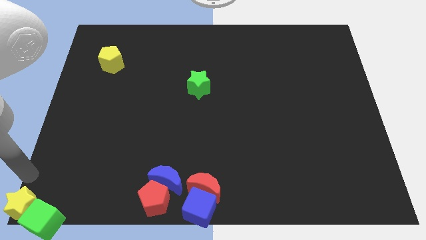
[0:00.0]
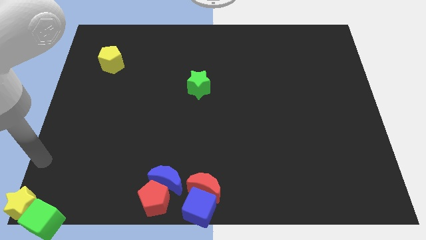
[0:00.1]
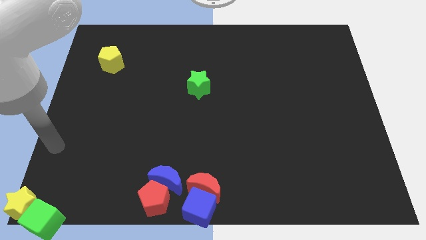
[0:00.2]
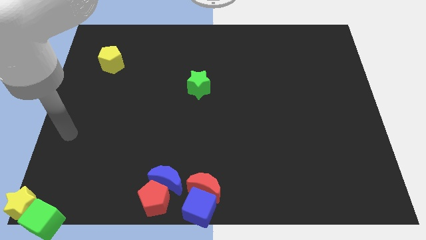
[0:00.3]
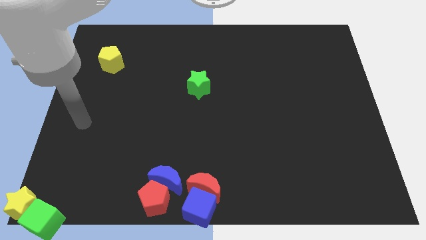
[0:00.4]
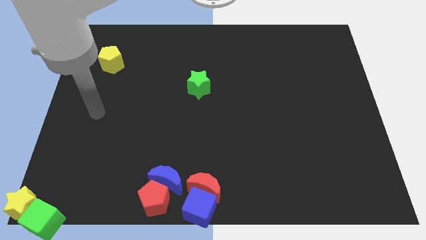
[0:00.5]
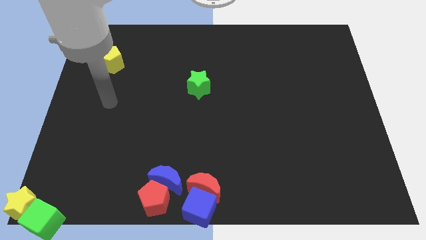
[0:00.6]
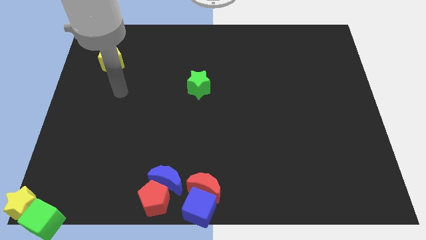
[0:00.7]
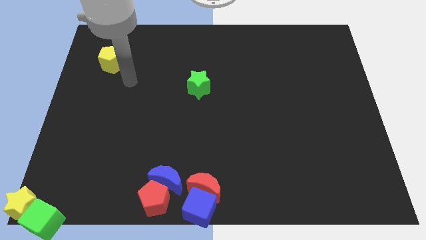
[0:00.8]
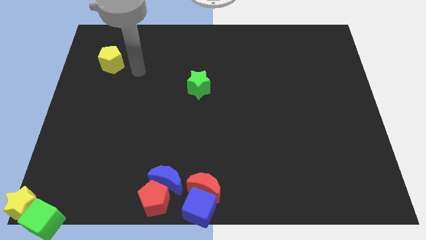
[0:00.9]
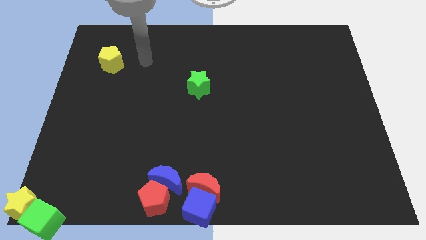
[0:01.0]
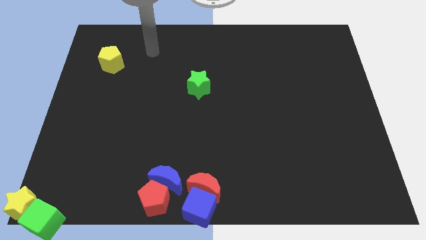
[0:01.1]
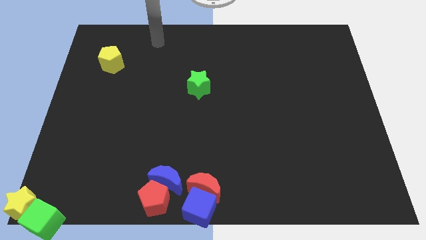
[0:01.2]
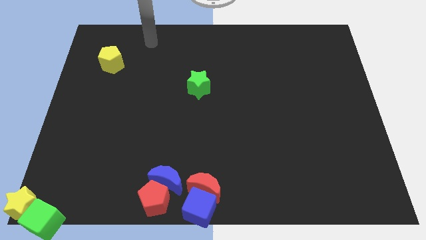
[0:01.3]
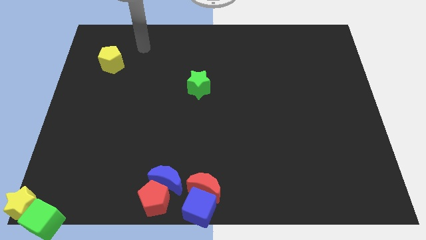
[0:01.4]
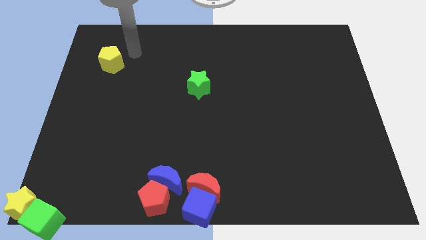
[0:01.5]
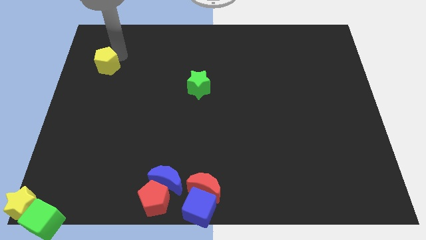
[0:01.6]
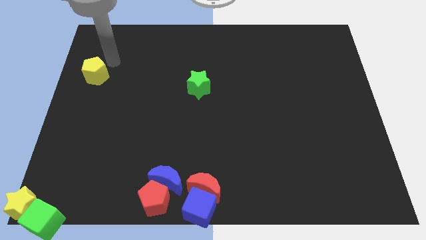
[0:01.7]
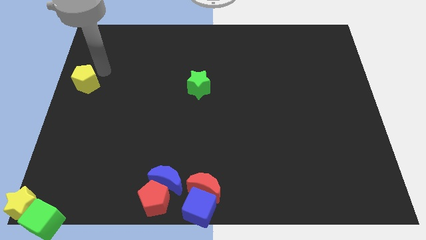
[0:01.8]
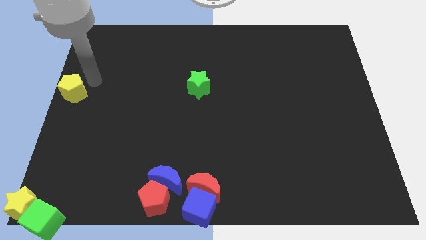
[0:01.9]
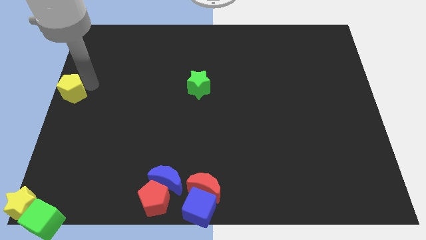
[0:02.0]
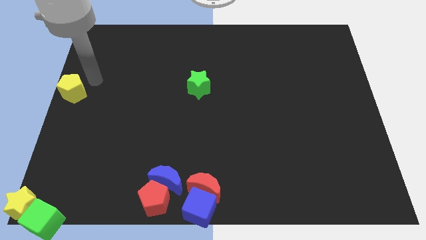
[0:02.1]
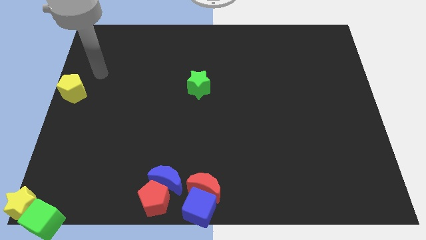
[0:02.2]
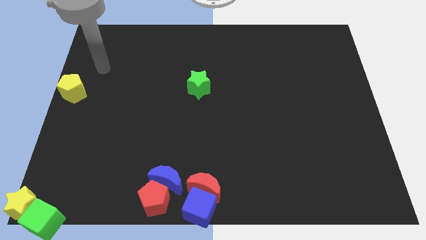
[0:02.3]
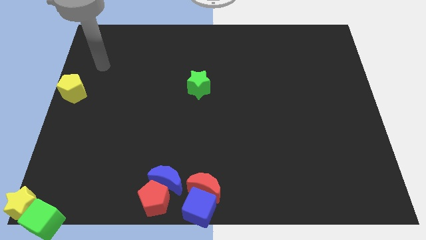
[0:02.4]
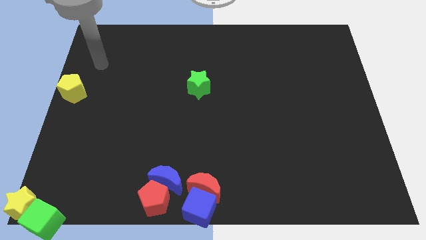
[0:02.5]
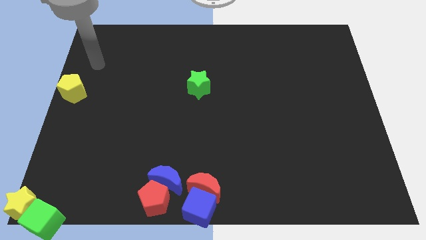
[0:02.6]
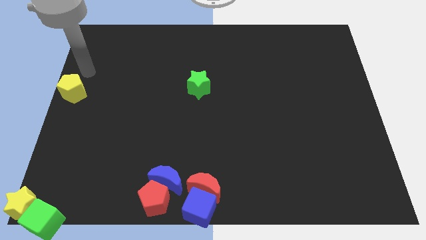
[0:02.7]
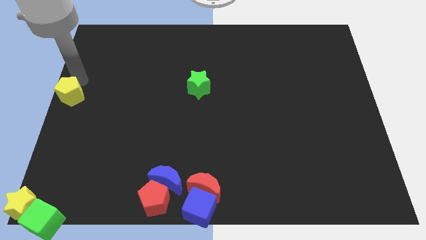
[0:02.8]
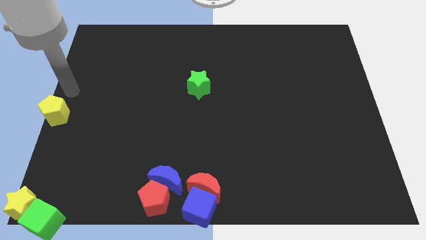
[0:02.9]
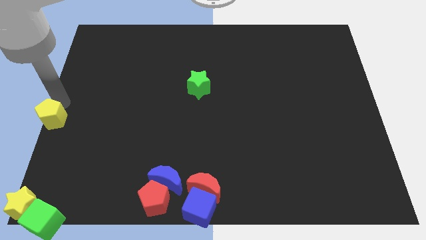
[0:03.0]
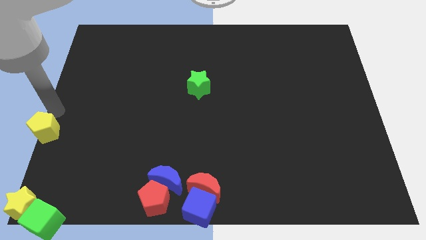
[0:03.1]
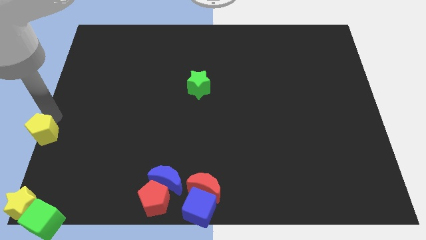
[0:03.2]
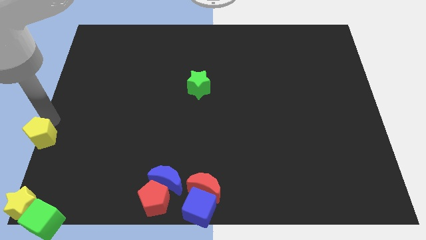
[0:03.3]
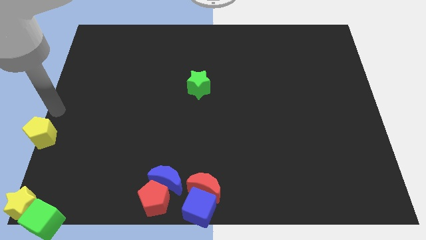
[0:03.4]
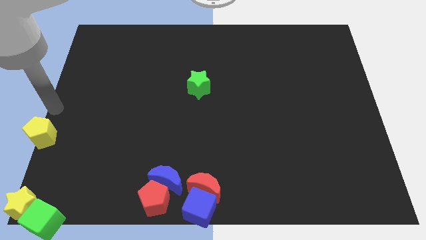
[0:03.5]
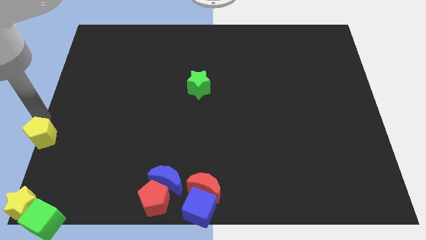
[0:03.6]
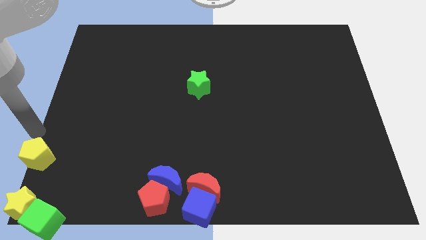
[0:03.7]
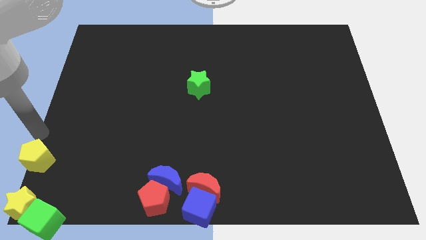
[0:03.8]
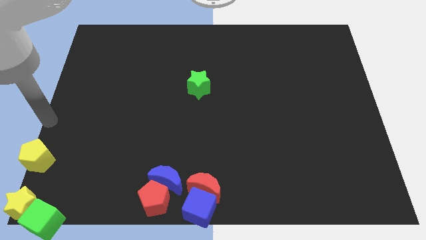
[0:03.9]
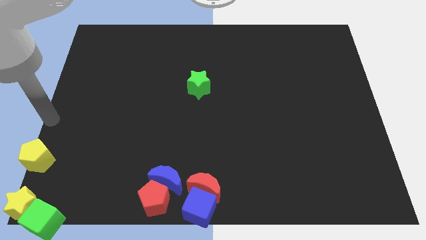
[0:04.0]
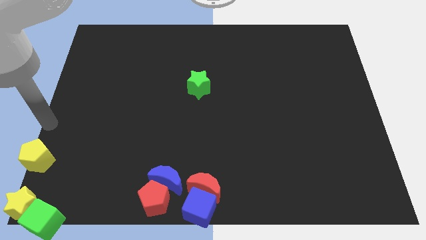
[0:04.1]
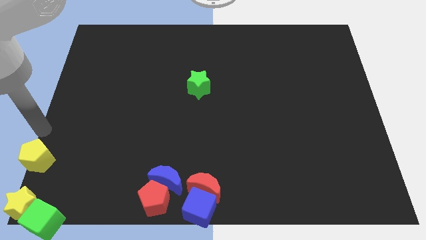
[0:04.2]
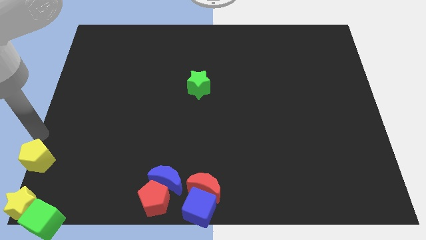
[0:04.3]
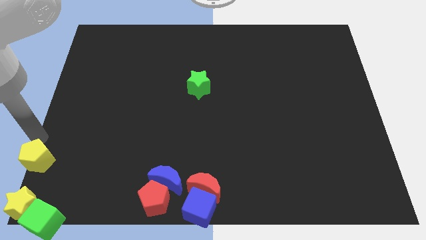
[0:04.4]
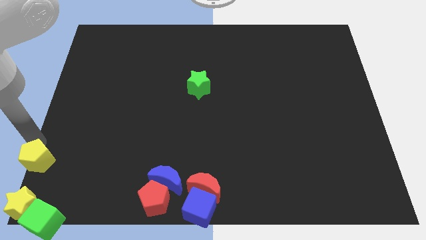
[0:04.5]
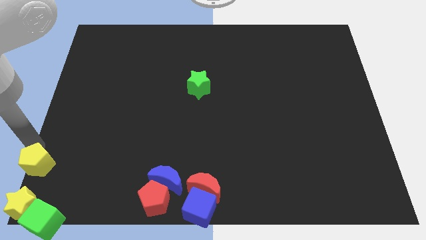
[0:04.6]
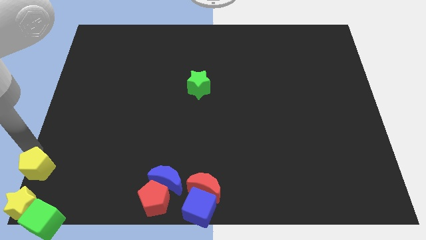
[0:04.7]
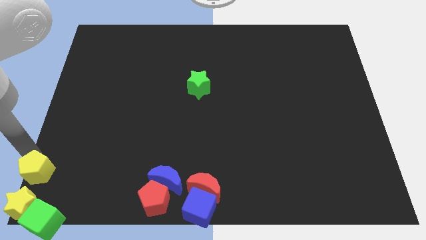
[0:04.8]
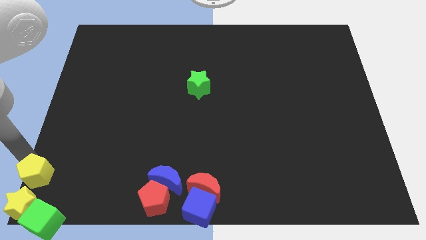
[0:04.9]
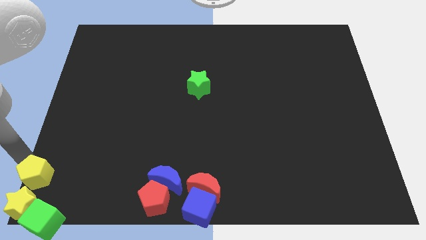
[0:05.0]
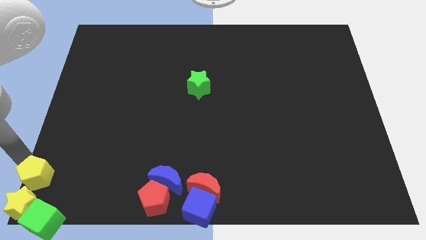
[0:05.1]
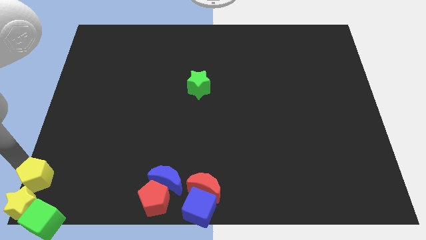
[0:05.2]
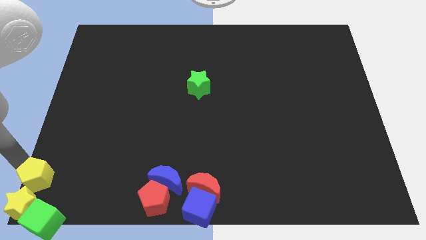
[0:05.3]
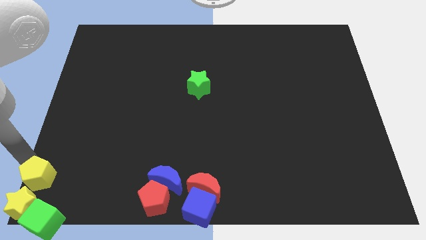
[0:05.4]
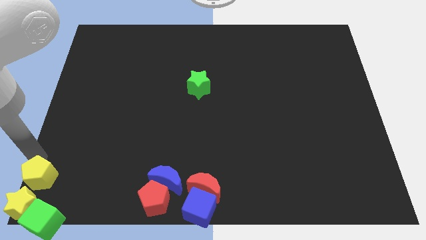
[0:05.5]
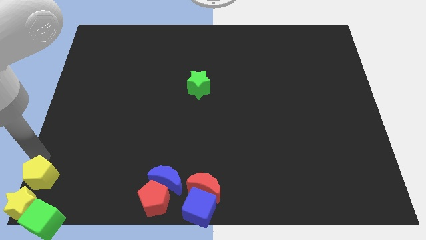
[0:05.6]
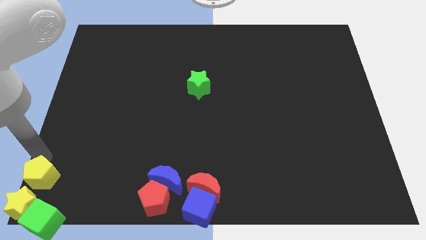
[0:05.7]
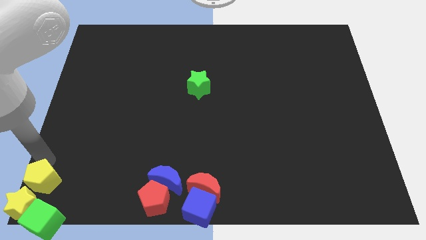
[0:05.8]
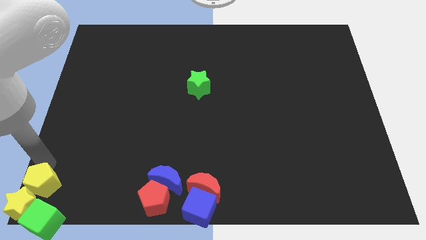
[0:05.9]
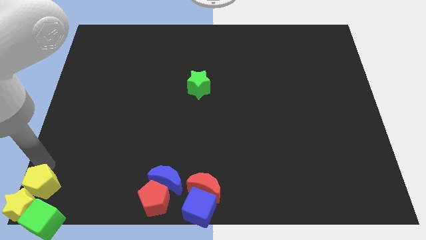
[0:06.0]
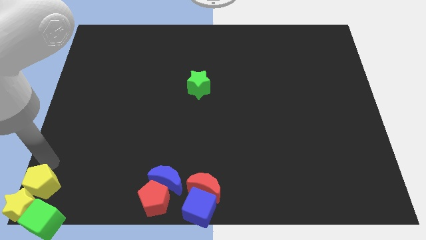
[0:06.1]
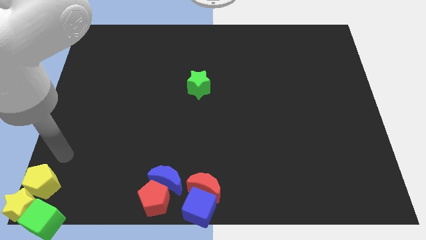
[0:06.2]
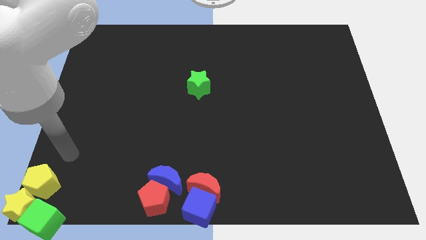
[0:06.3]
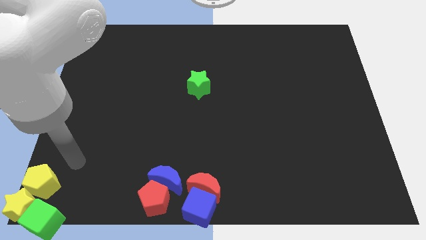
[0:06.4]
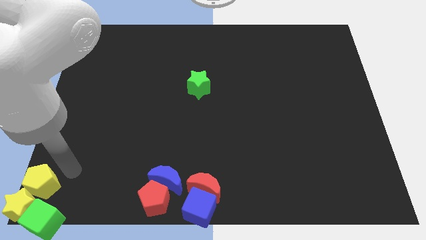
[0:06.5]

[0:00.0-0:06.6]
push the yellow pentagon into the yellow star

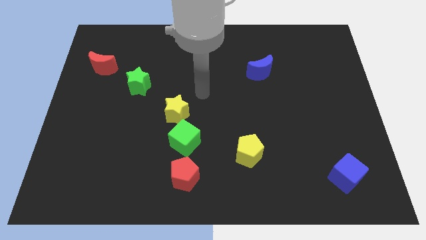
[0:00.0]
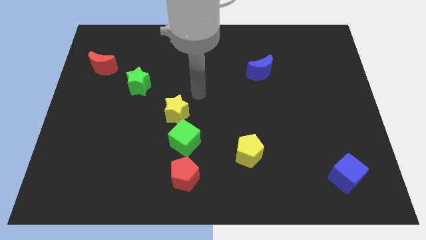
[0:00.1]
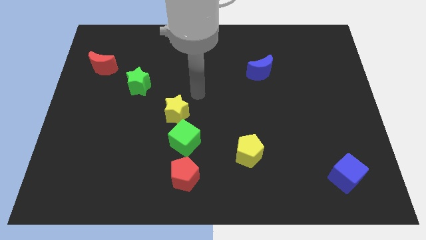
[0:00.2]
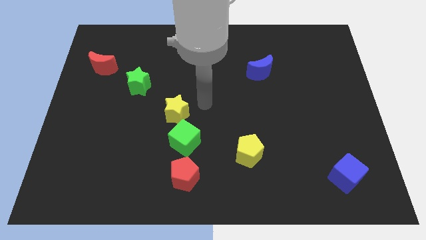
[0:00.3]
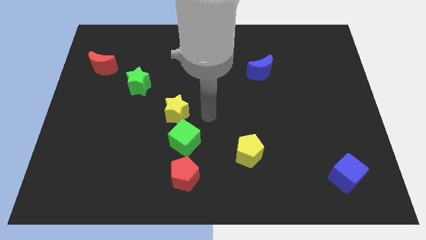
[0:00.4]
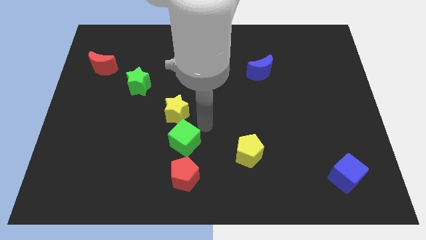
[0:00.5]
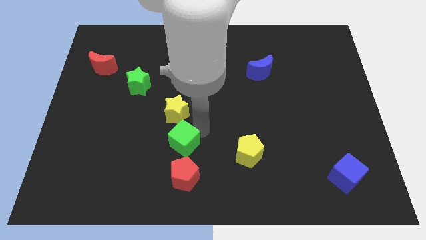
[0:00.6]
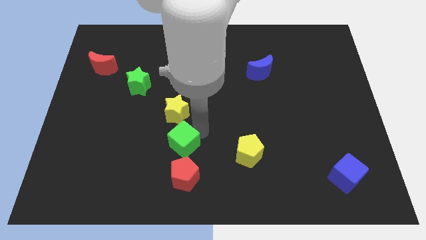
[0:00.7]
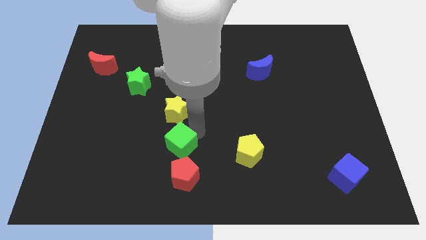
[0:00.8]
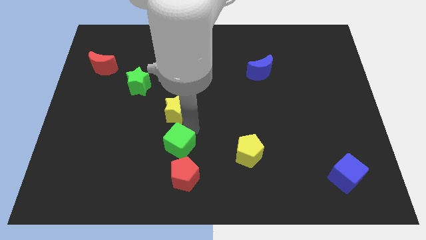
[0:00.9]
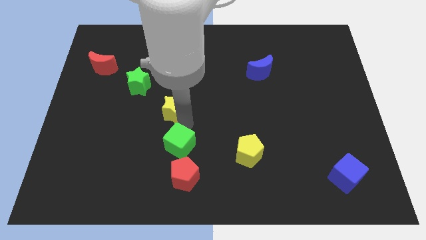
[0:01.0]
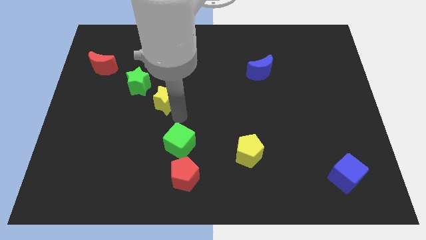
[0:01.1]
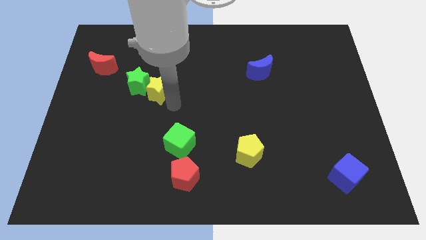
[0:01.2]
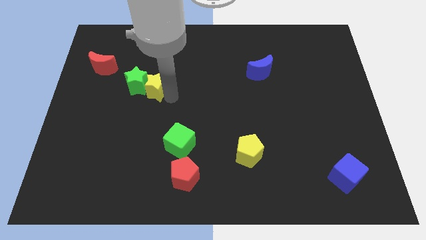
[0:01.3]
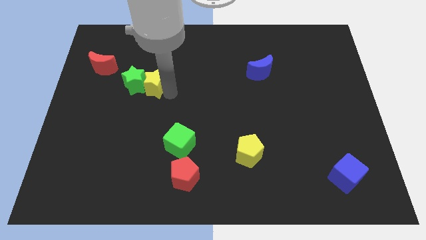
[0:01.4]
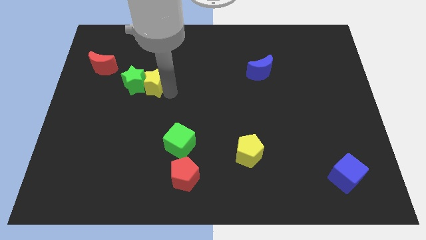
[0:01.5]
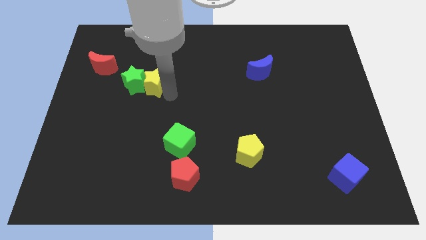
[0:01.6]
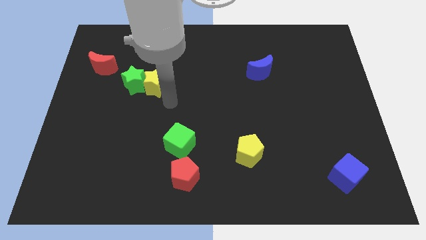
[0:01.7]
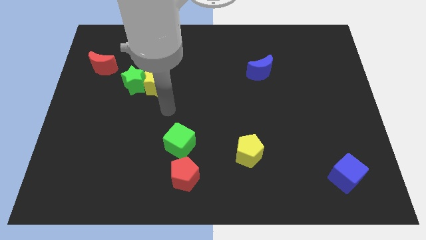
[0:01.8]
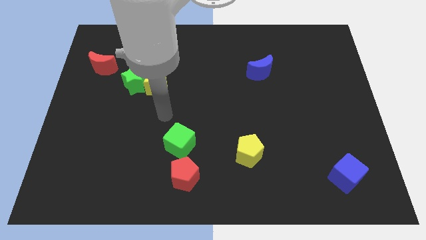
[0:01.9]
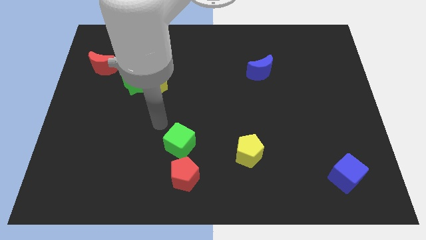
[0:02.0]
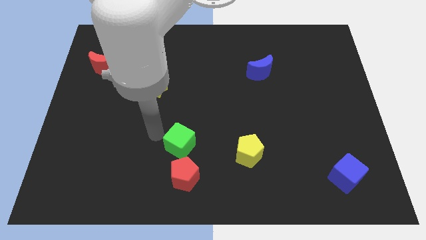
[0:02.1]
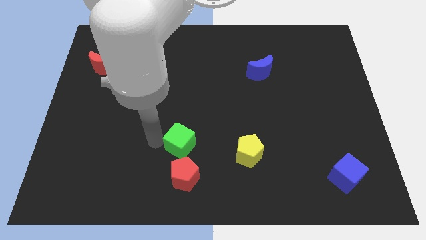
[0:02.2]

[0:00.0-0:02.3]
push yellow star in to green star

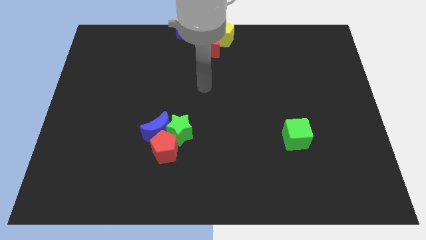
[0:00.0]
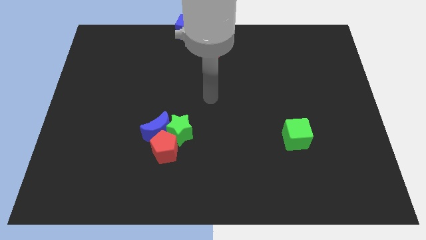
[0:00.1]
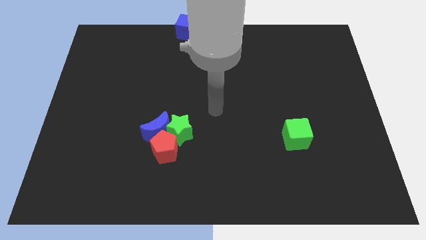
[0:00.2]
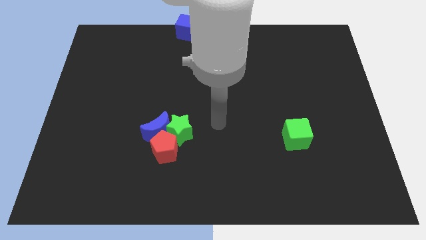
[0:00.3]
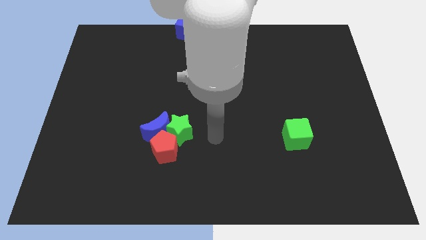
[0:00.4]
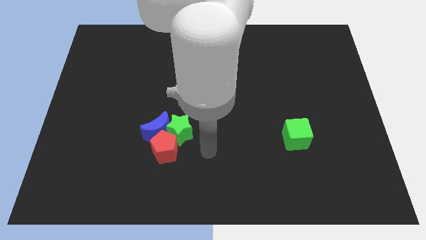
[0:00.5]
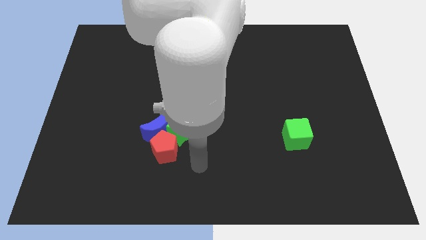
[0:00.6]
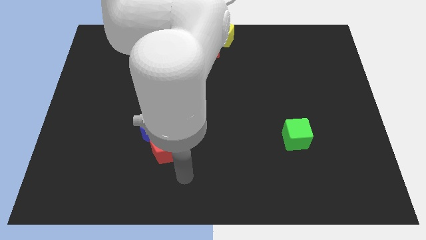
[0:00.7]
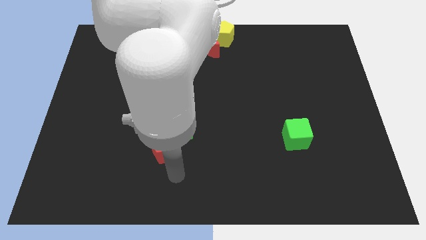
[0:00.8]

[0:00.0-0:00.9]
place your hand under red pentagon
